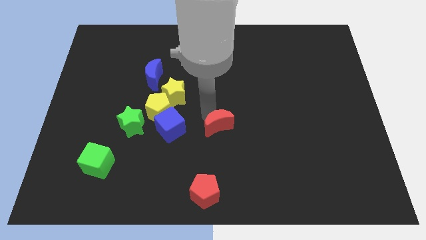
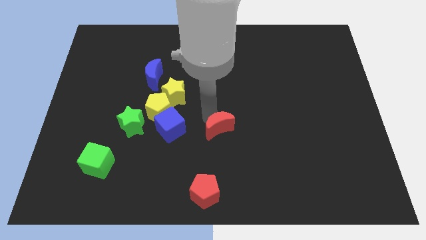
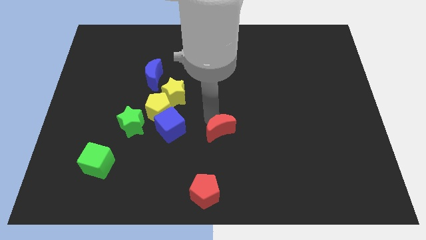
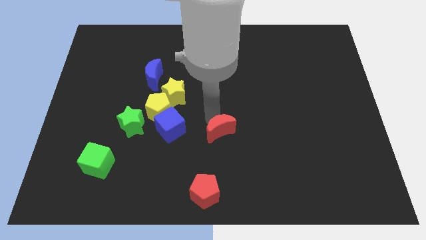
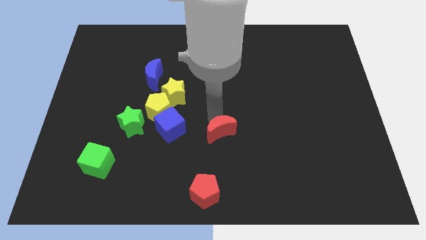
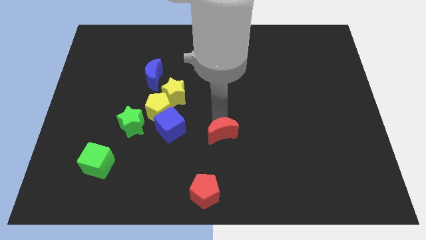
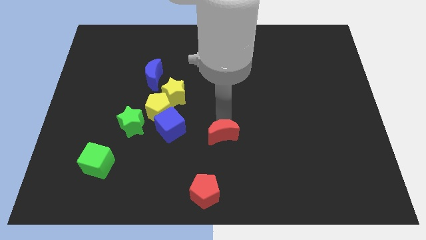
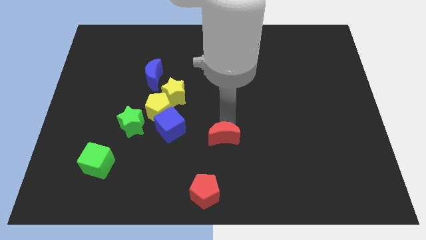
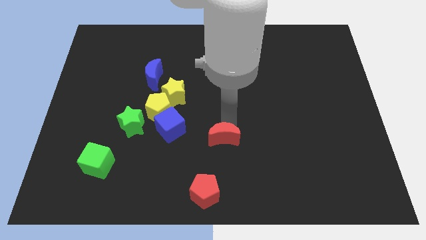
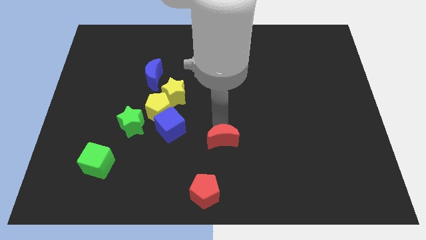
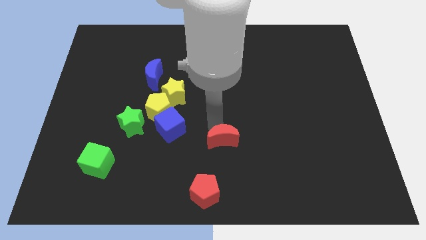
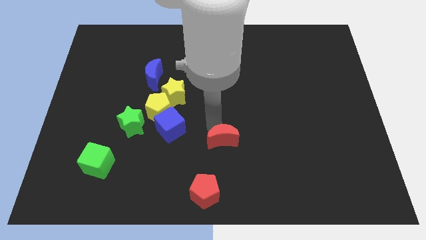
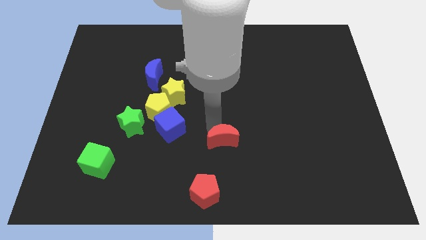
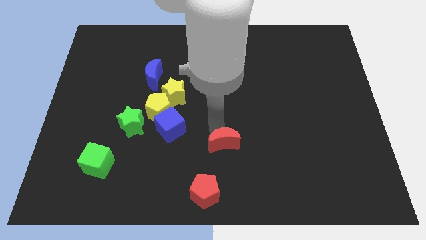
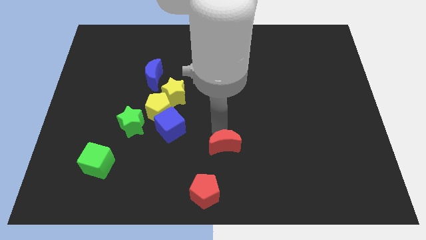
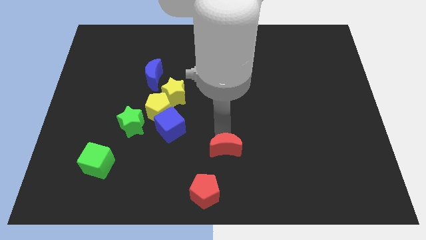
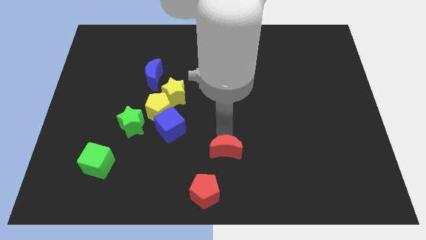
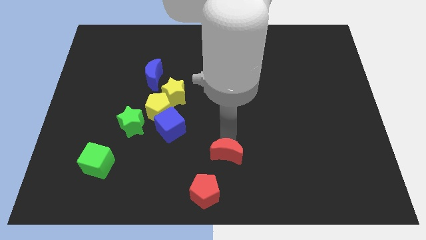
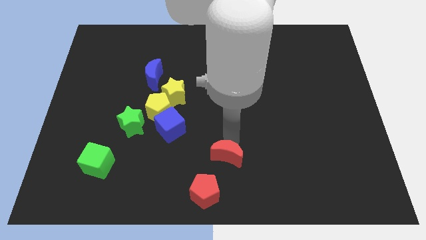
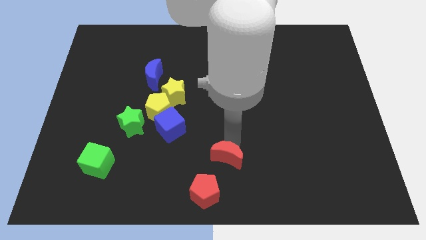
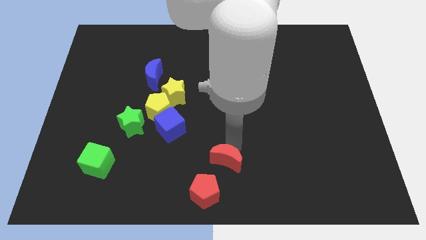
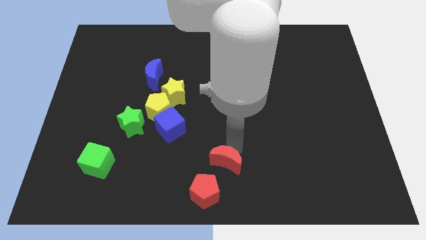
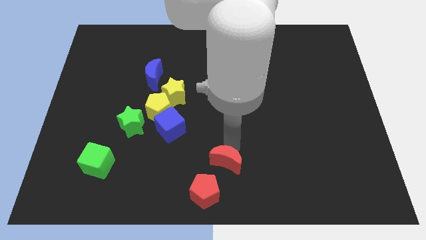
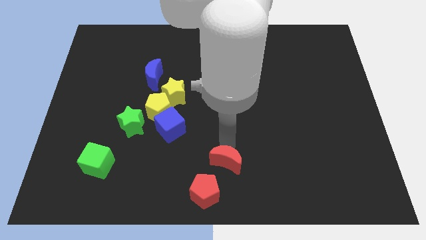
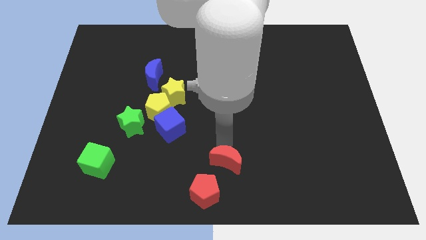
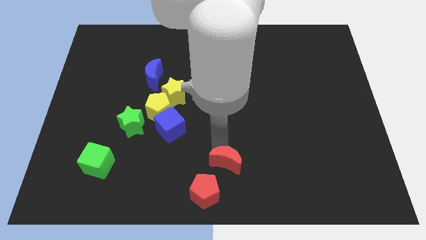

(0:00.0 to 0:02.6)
push the red moon towards red pentagon

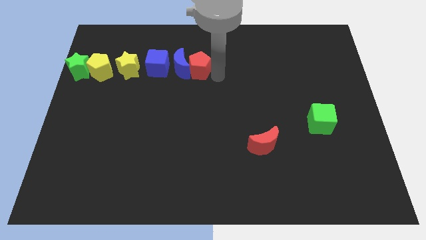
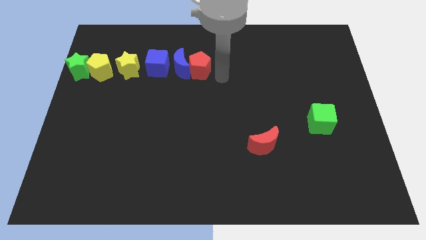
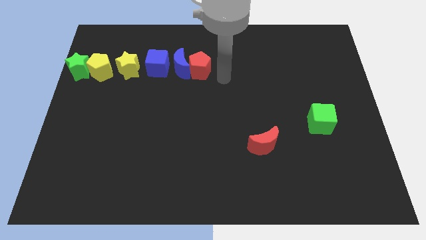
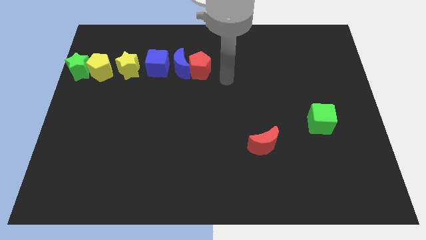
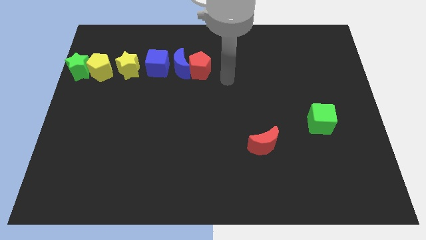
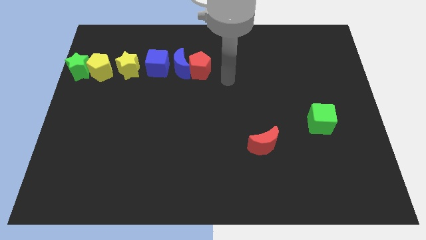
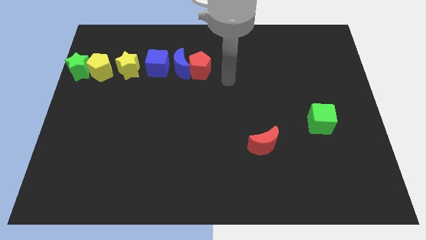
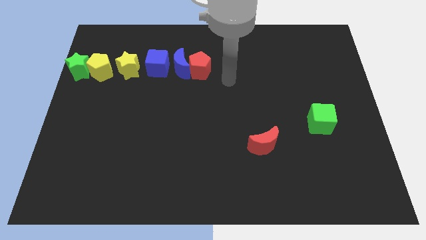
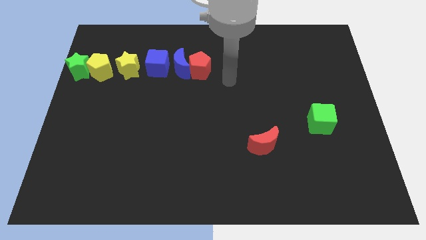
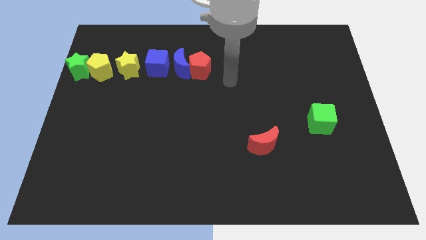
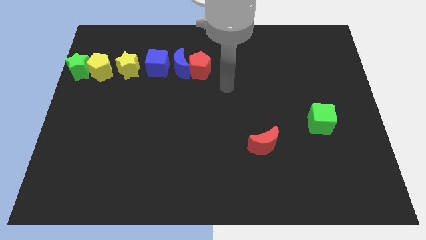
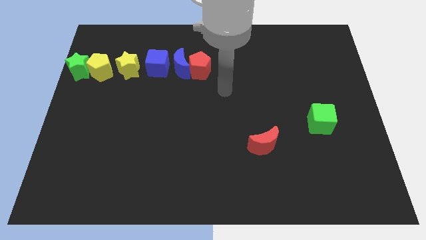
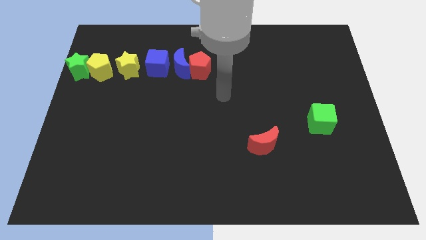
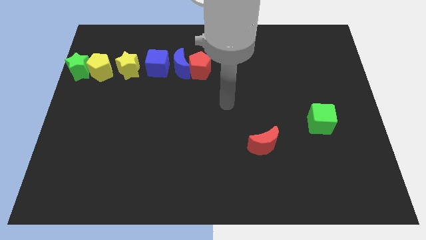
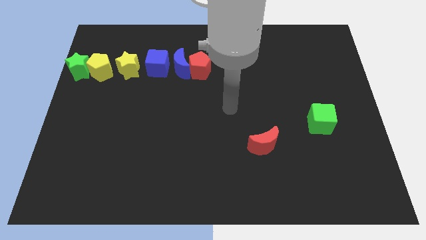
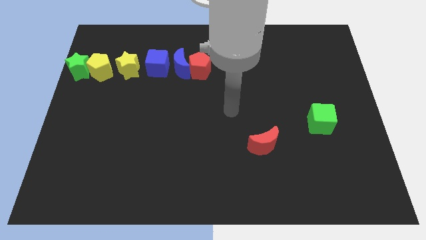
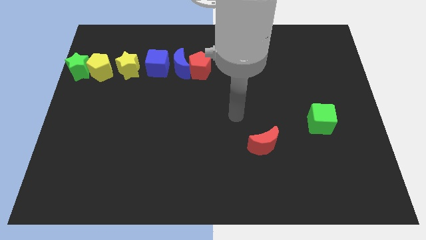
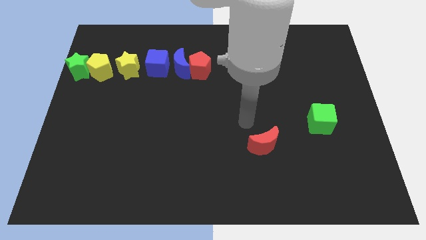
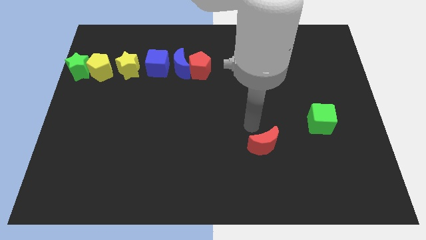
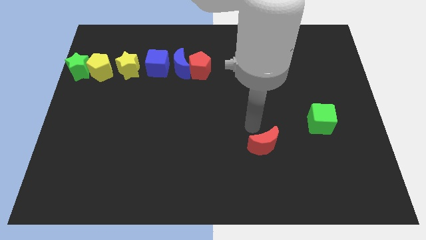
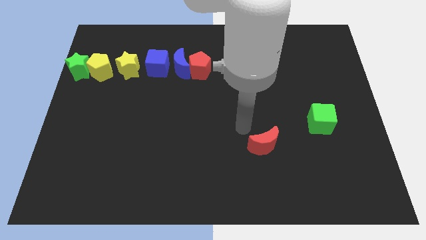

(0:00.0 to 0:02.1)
move your arm away from the red pentagon

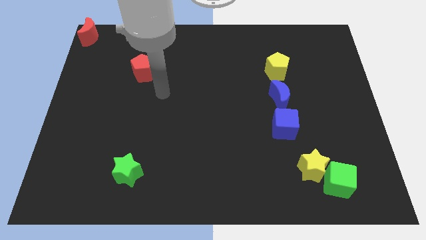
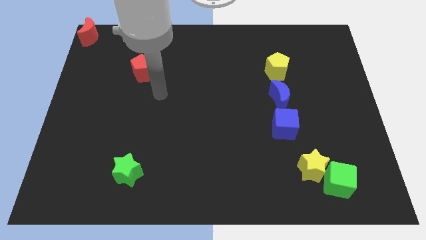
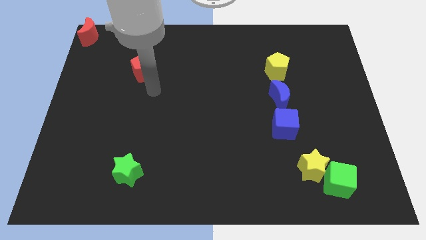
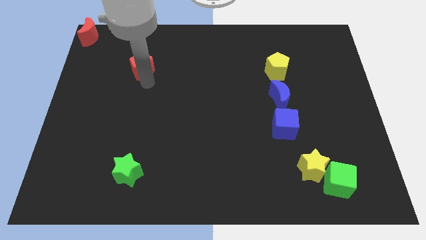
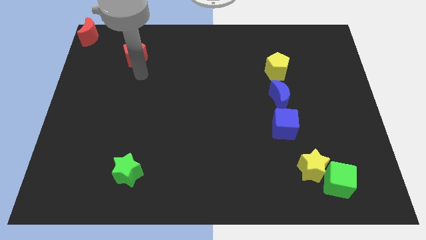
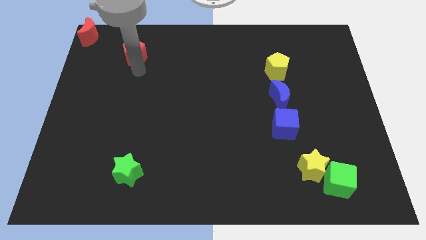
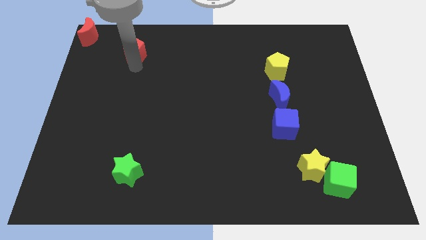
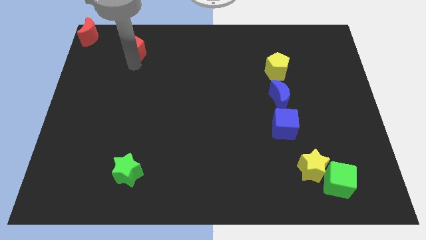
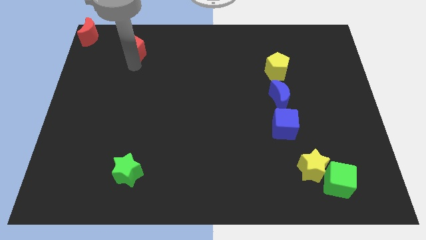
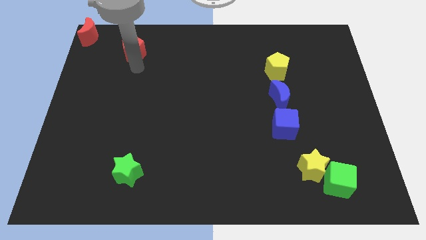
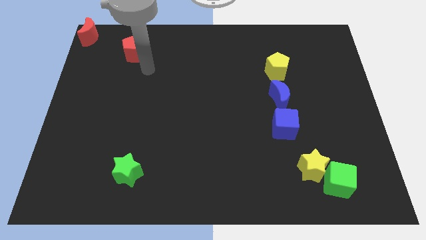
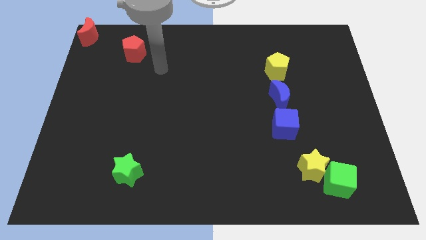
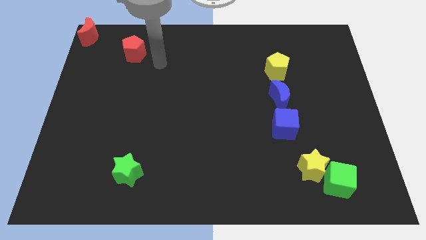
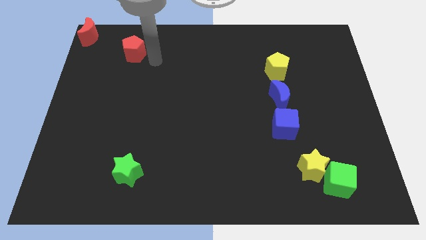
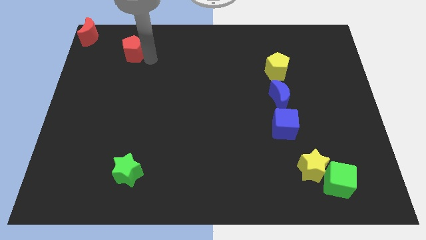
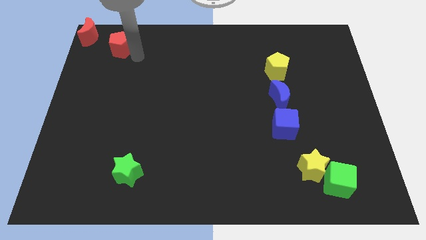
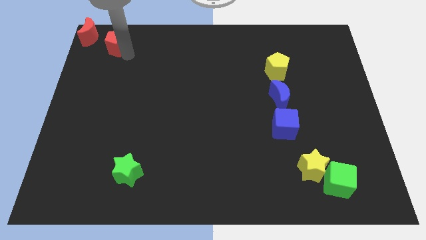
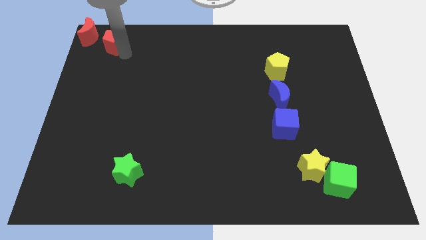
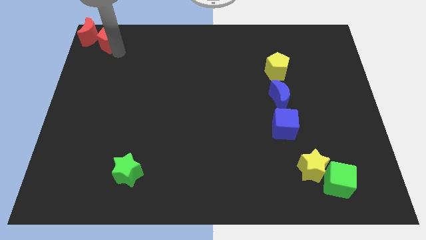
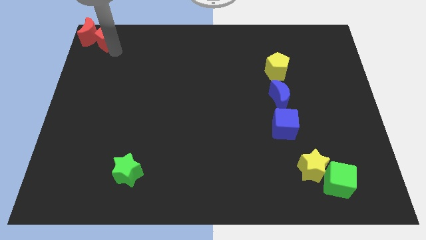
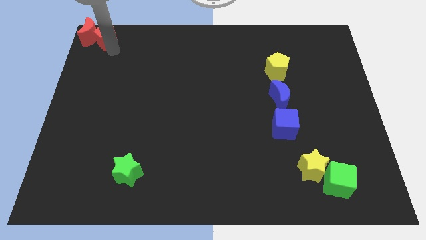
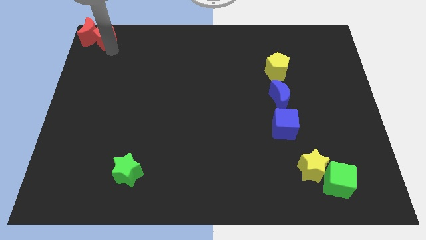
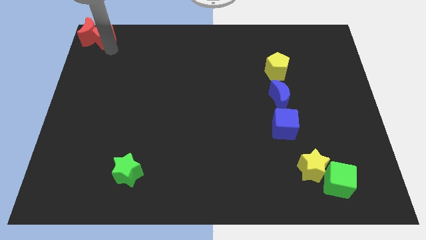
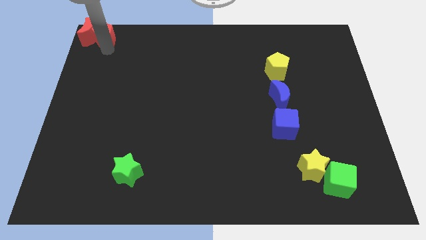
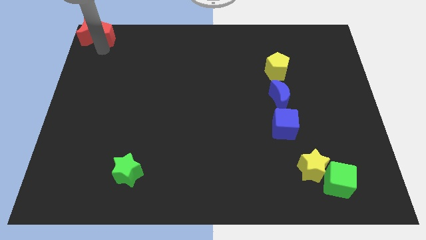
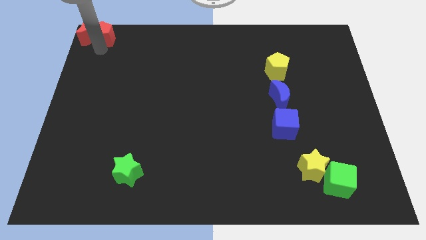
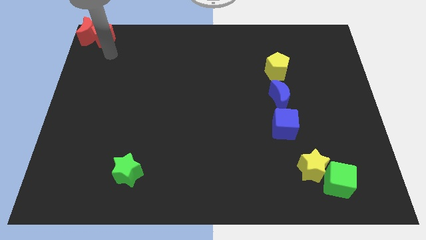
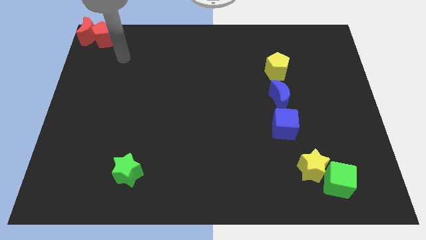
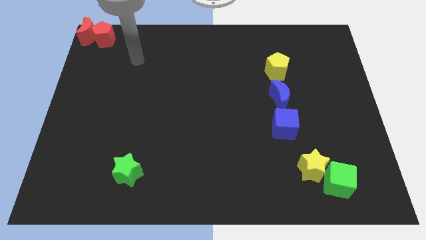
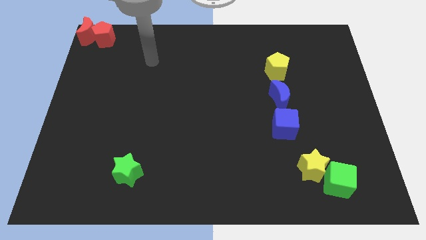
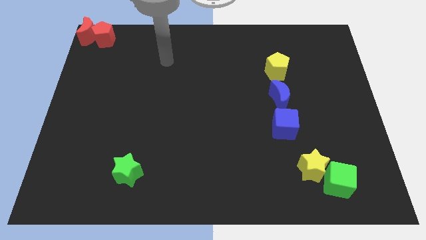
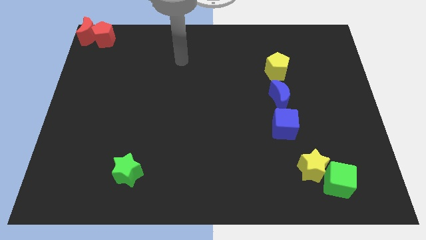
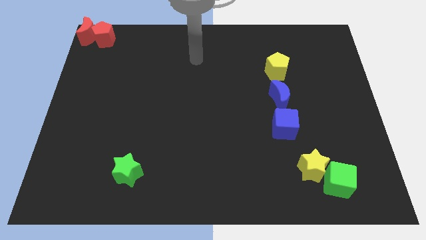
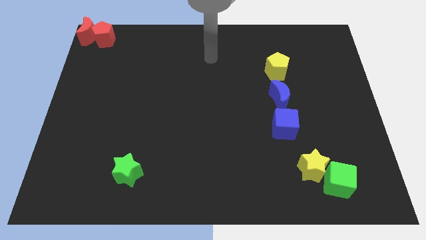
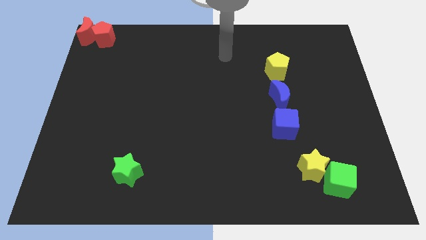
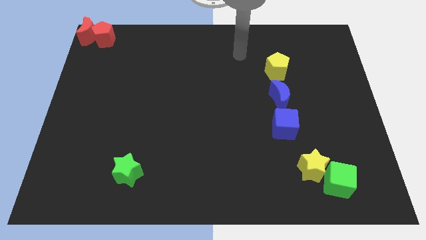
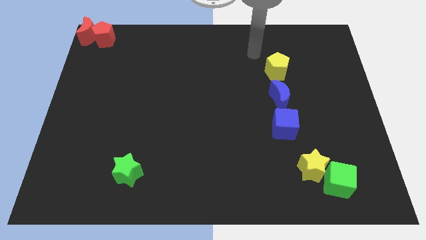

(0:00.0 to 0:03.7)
push the red pentagon into red moon

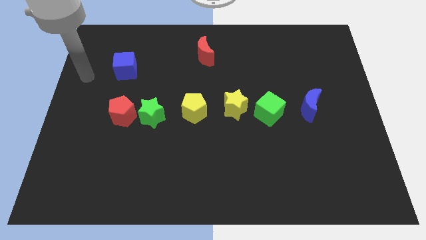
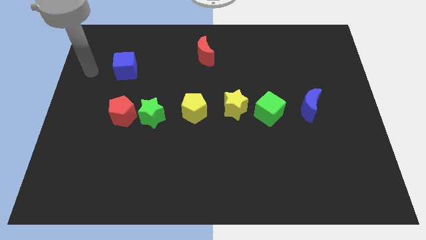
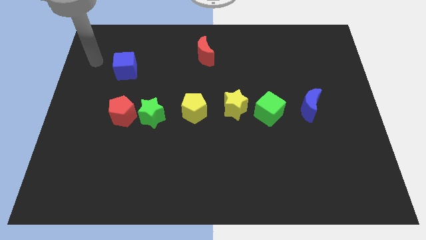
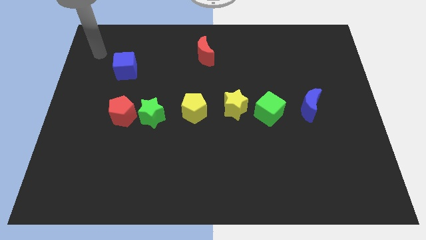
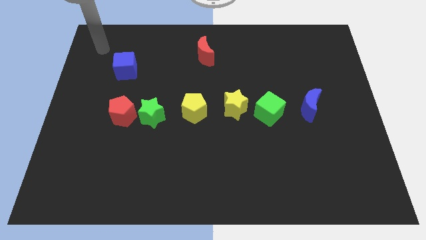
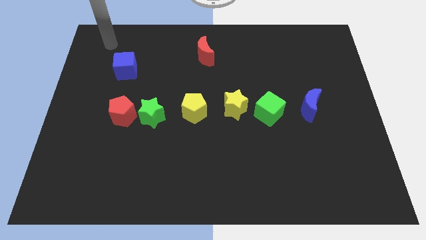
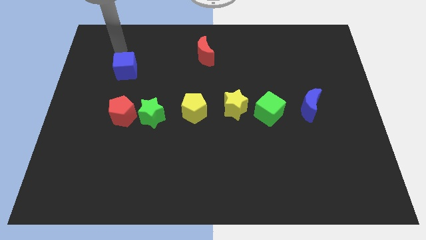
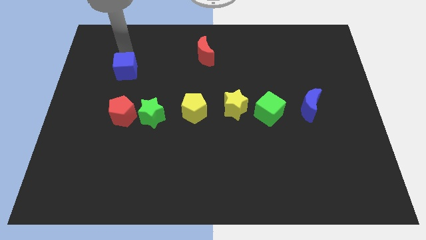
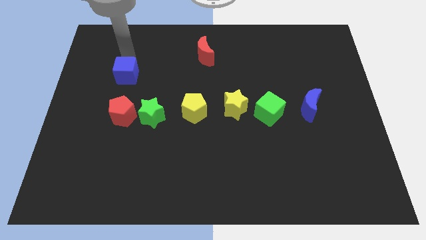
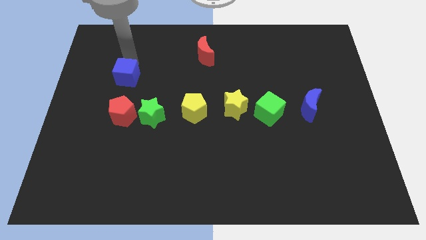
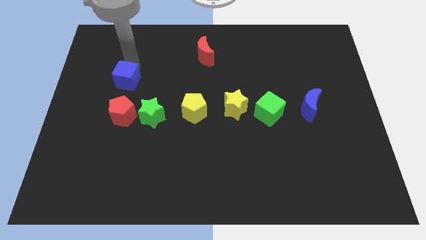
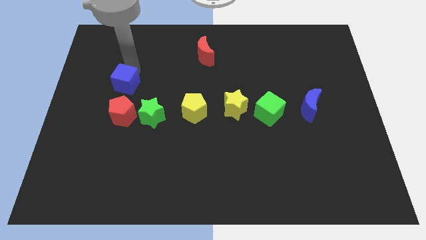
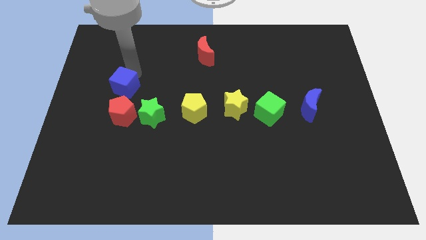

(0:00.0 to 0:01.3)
push the blue cube towards the red pentagon
